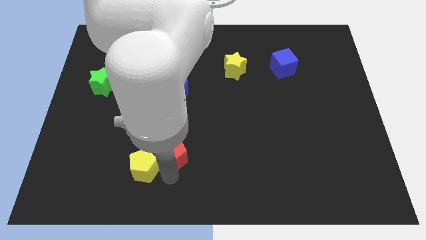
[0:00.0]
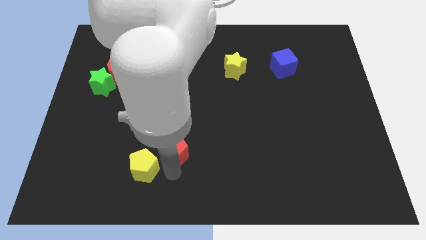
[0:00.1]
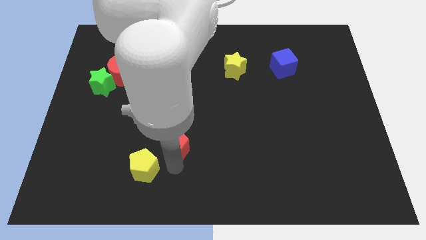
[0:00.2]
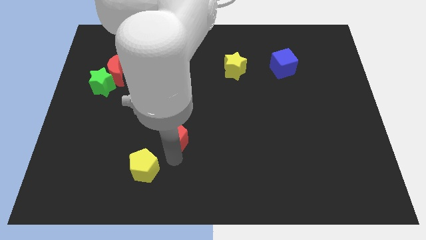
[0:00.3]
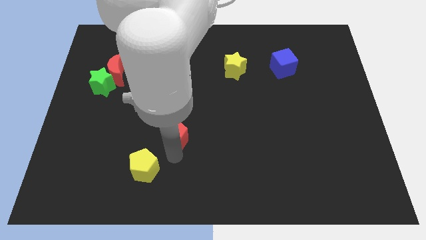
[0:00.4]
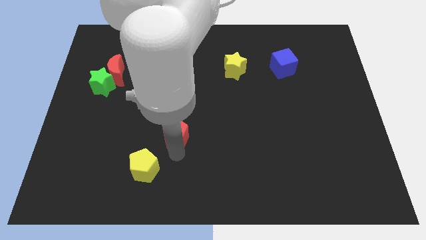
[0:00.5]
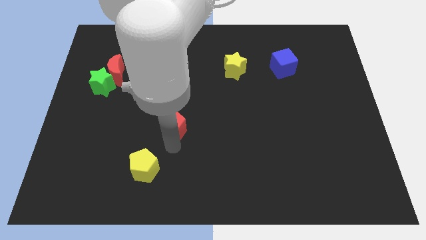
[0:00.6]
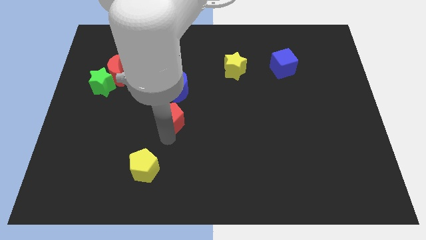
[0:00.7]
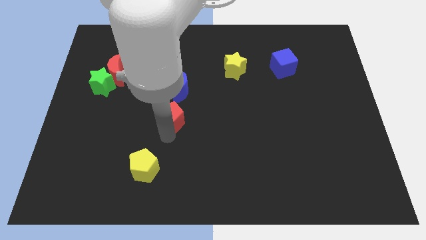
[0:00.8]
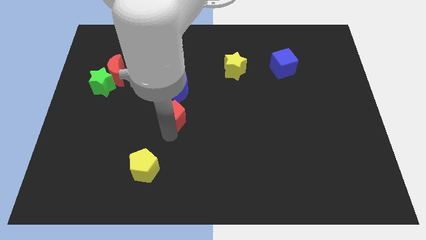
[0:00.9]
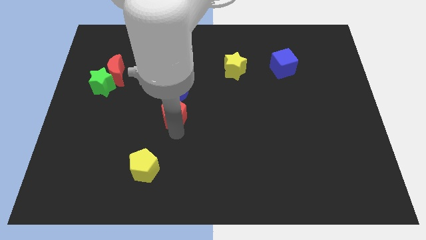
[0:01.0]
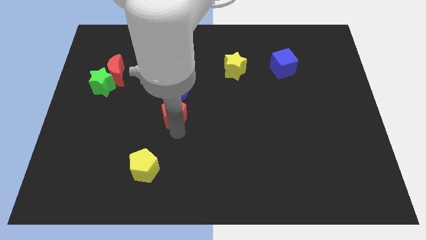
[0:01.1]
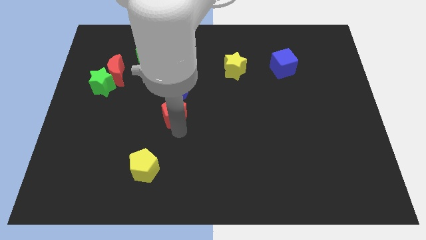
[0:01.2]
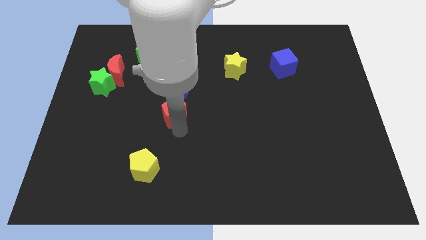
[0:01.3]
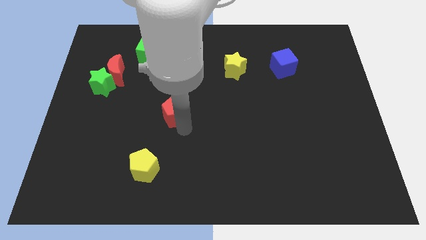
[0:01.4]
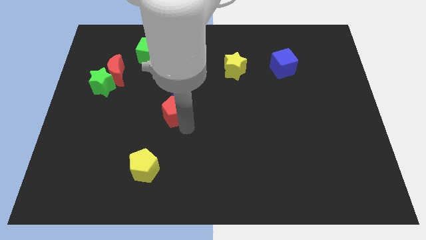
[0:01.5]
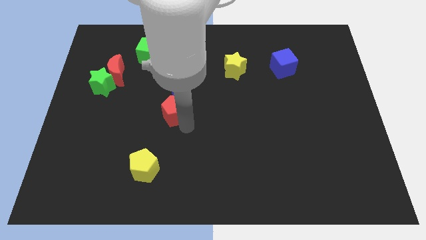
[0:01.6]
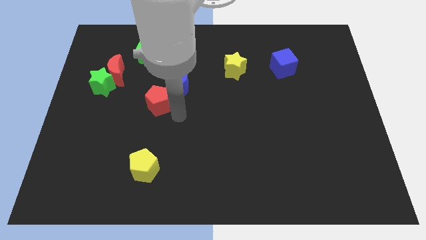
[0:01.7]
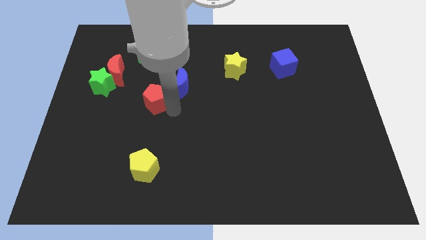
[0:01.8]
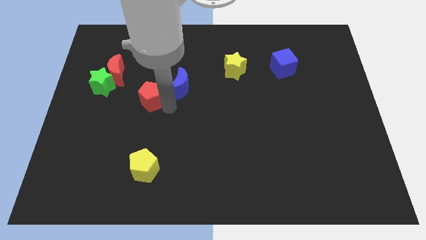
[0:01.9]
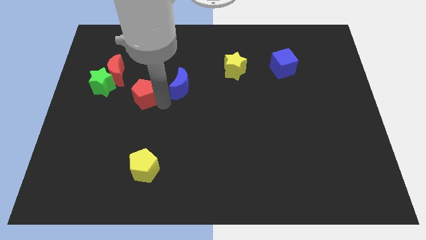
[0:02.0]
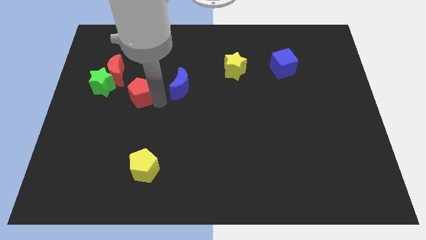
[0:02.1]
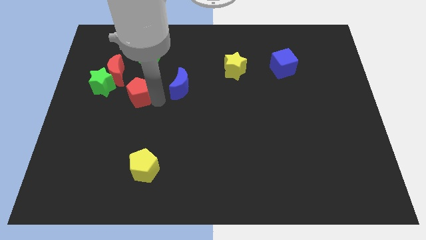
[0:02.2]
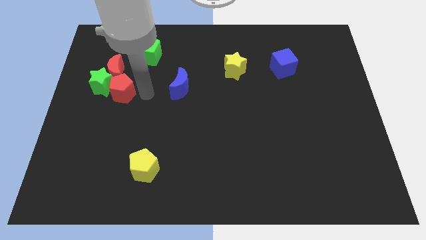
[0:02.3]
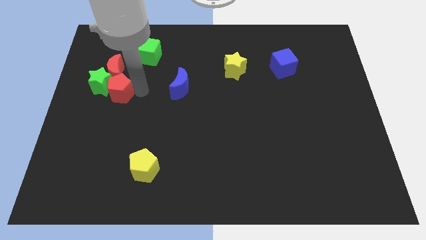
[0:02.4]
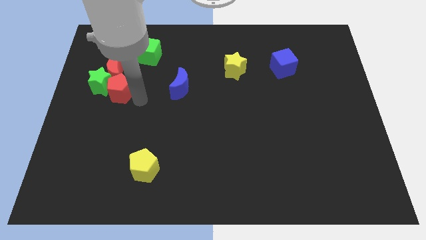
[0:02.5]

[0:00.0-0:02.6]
place the red pentagon at the bottom right side of green star

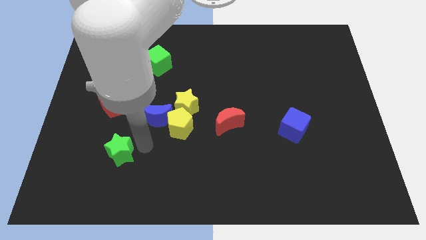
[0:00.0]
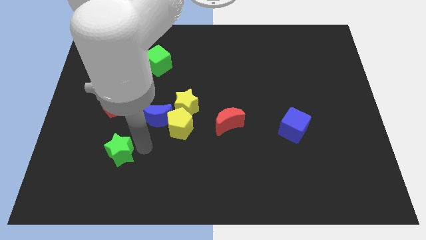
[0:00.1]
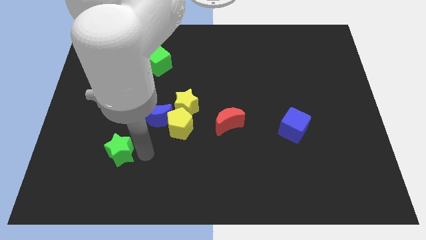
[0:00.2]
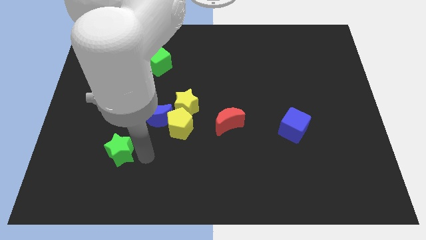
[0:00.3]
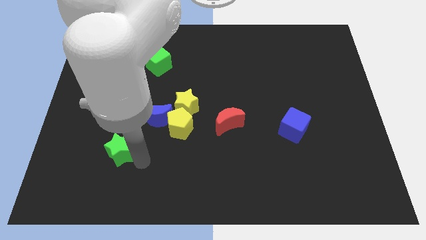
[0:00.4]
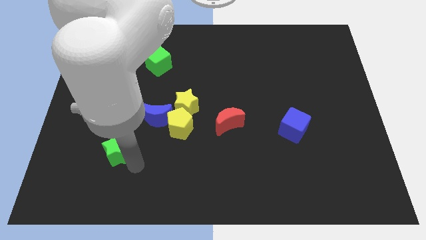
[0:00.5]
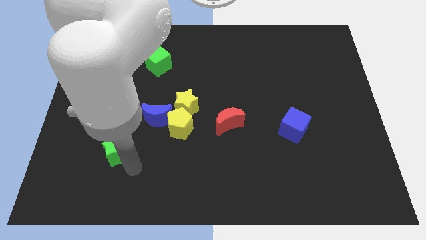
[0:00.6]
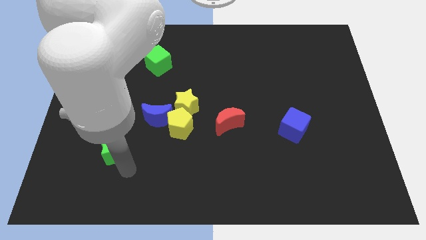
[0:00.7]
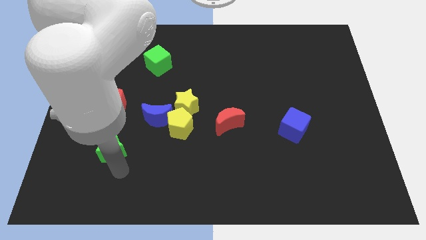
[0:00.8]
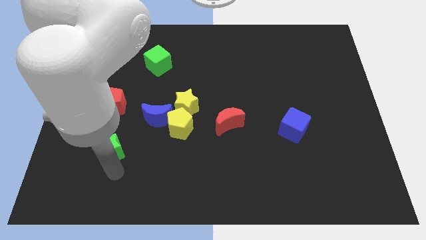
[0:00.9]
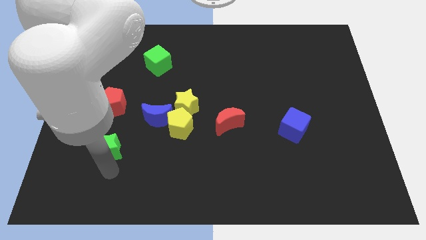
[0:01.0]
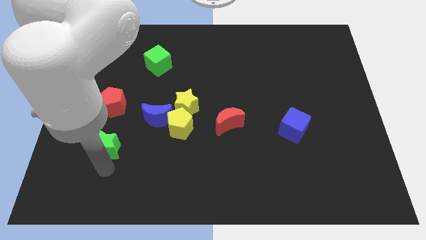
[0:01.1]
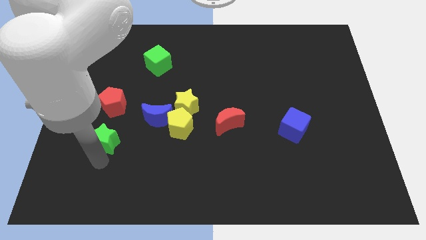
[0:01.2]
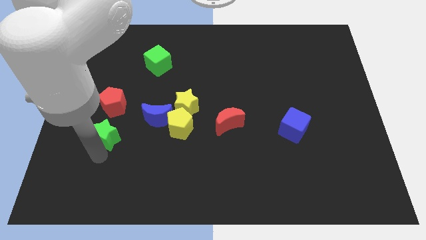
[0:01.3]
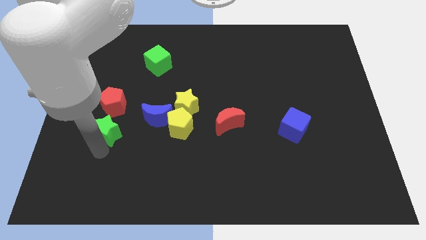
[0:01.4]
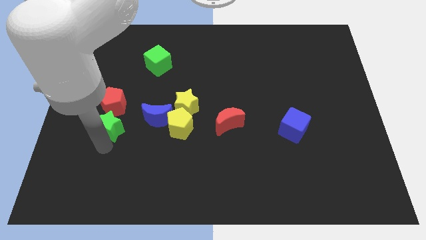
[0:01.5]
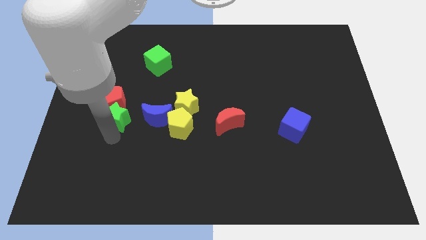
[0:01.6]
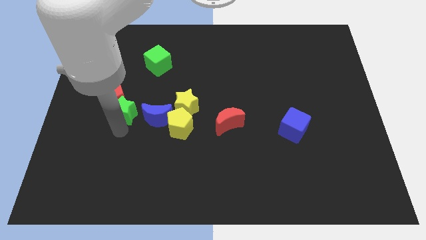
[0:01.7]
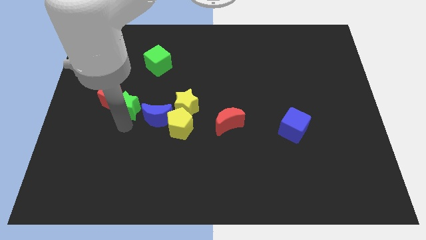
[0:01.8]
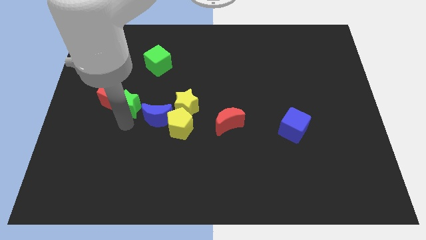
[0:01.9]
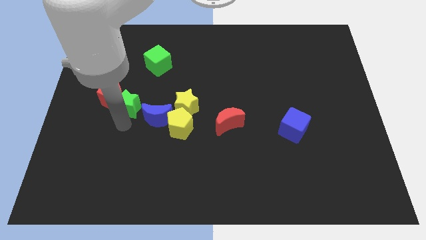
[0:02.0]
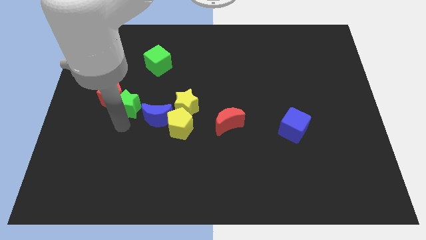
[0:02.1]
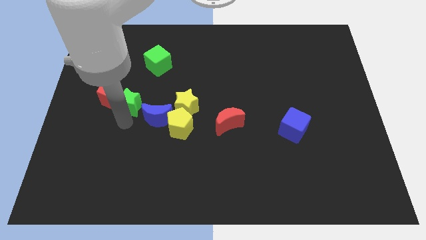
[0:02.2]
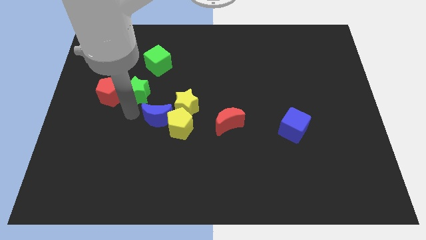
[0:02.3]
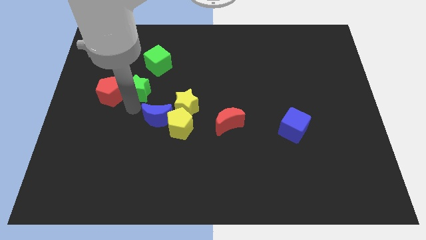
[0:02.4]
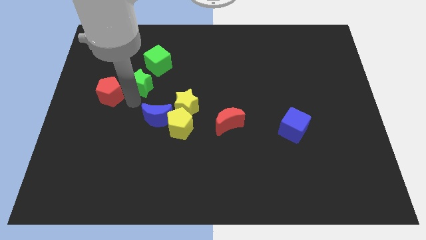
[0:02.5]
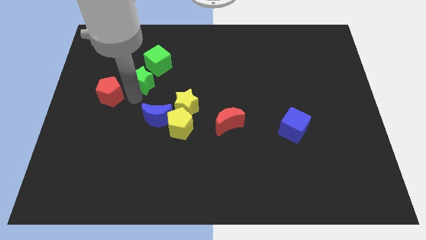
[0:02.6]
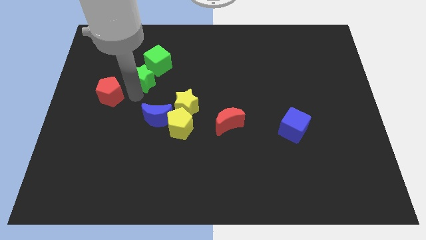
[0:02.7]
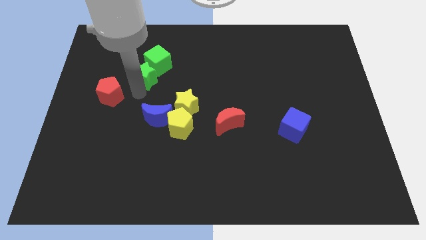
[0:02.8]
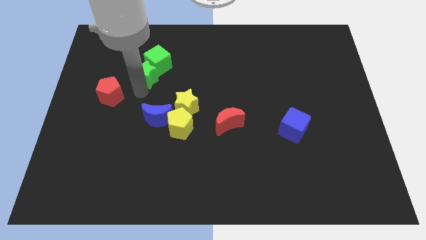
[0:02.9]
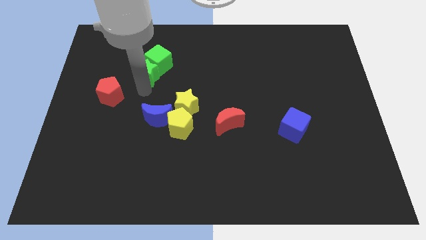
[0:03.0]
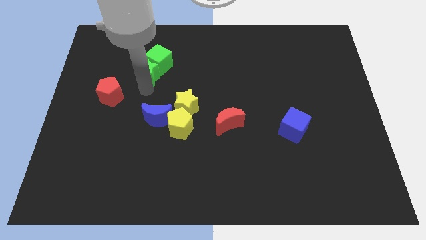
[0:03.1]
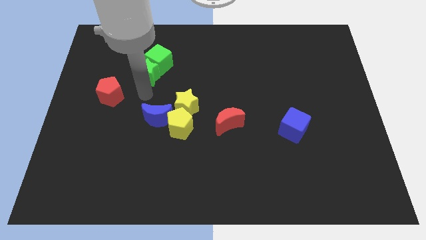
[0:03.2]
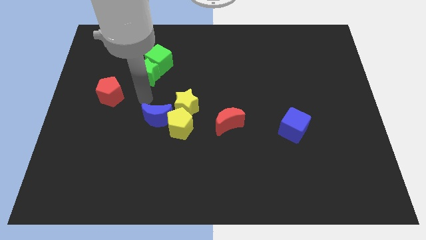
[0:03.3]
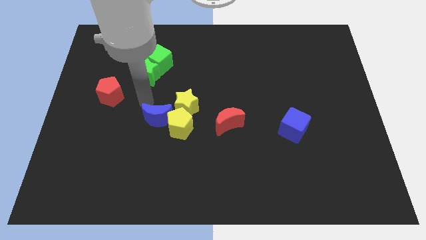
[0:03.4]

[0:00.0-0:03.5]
push the green star into the green cube

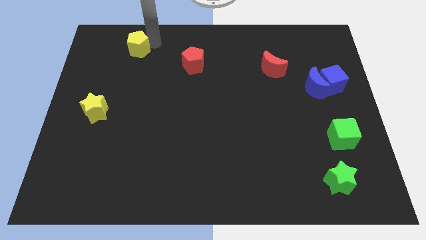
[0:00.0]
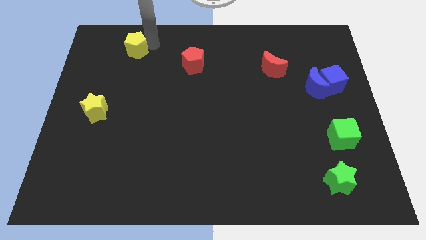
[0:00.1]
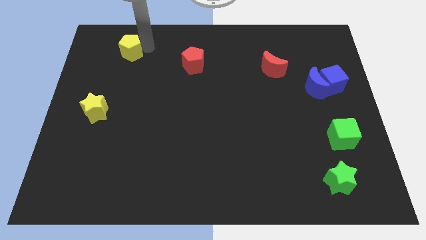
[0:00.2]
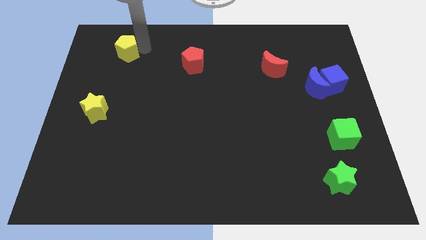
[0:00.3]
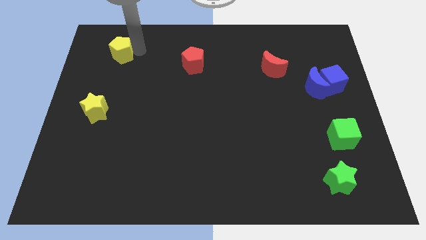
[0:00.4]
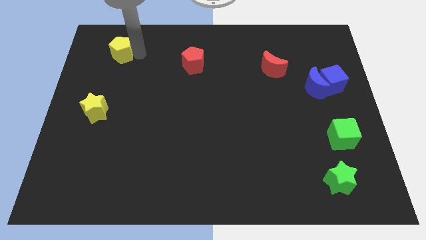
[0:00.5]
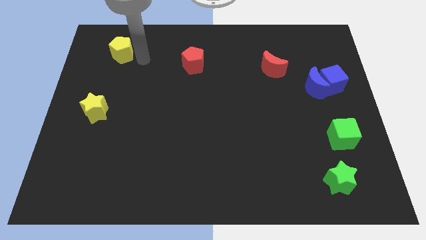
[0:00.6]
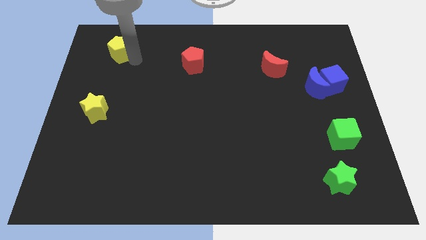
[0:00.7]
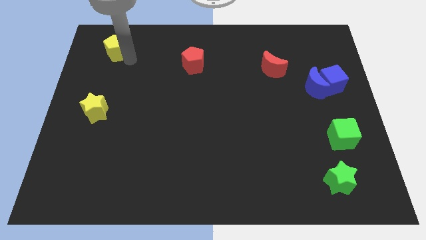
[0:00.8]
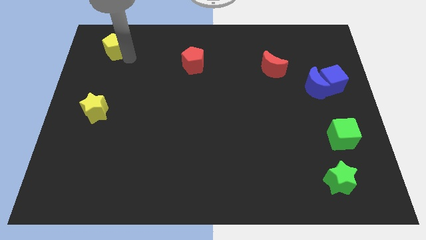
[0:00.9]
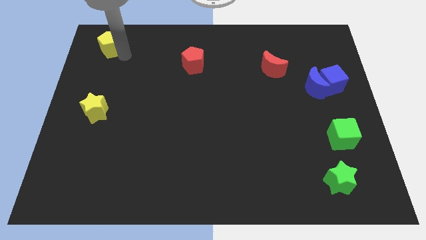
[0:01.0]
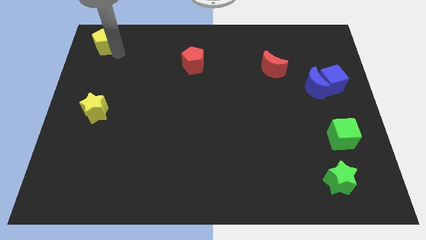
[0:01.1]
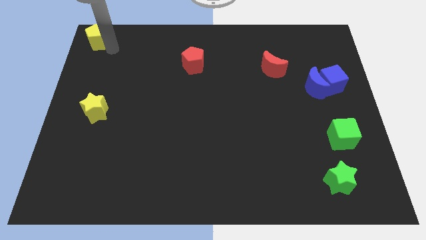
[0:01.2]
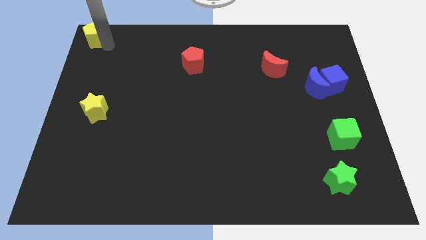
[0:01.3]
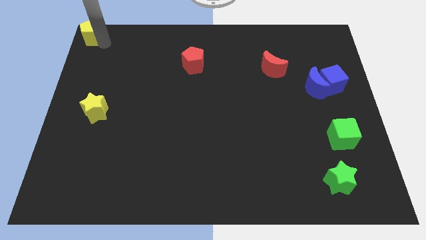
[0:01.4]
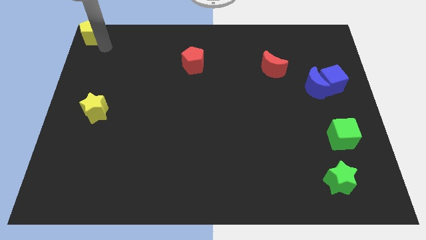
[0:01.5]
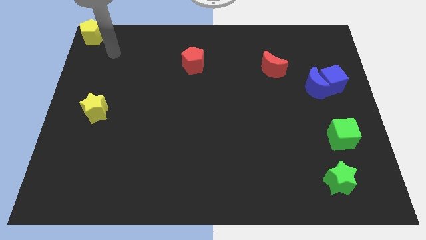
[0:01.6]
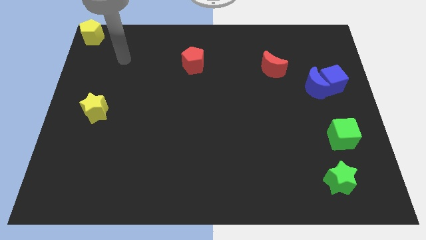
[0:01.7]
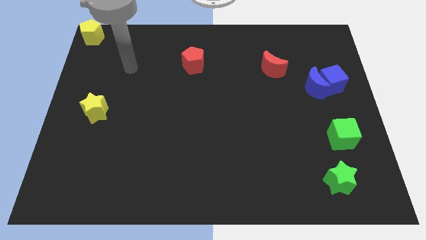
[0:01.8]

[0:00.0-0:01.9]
place the yellow pentagon at top left corner of the board

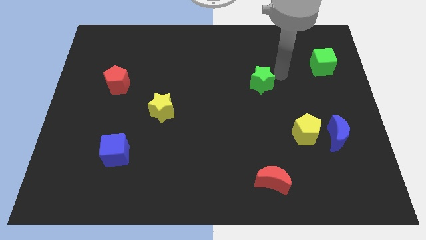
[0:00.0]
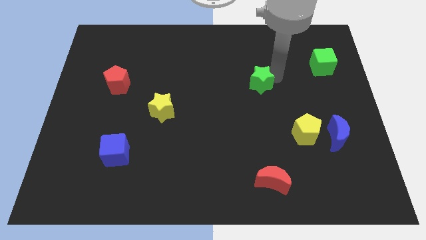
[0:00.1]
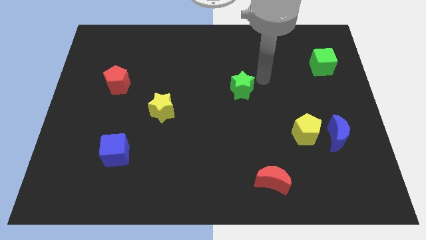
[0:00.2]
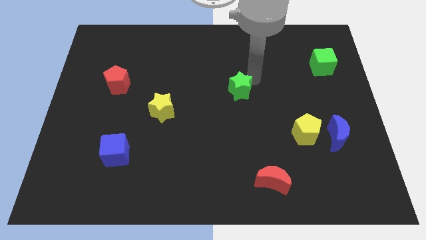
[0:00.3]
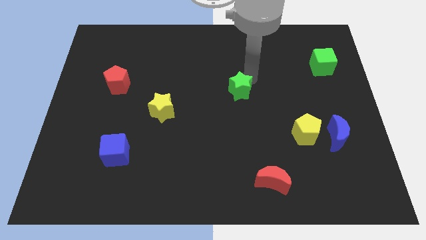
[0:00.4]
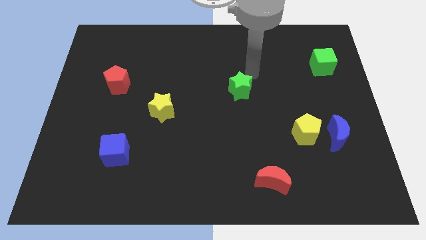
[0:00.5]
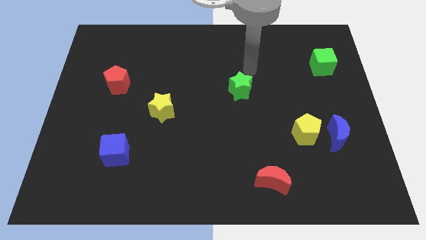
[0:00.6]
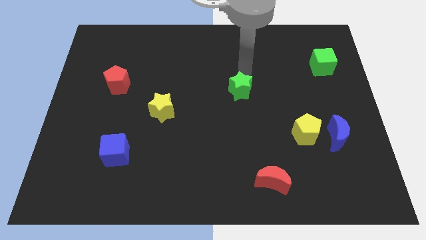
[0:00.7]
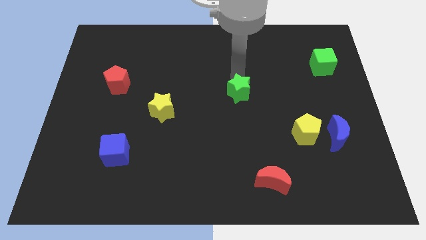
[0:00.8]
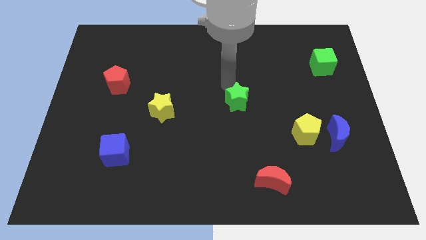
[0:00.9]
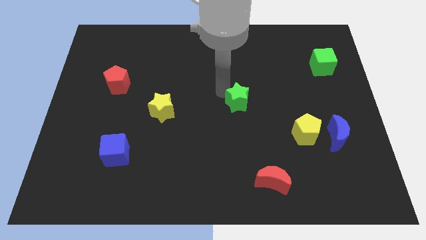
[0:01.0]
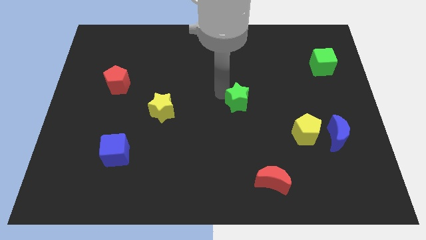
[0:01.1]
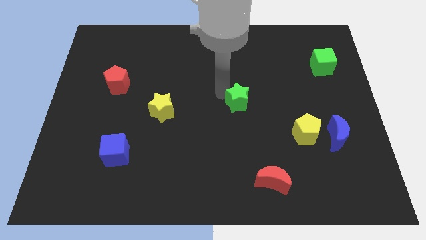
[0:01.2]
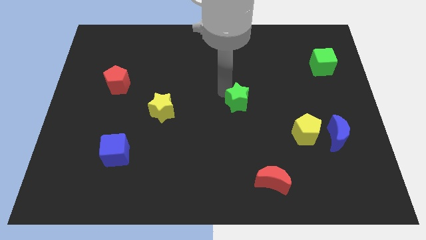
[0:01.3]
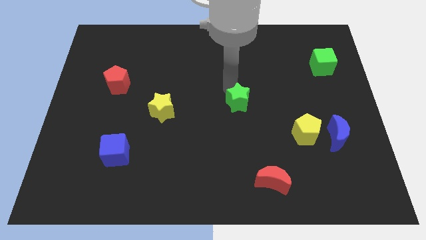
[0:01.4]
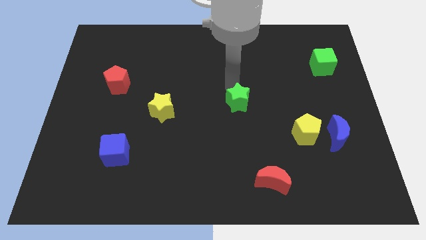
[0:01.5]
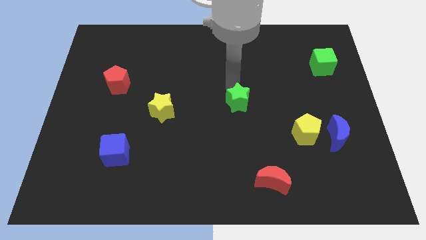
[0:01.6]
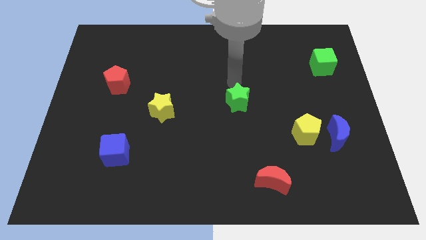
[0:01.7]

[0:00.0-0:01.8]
place the green star diagonal to green cube
